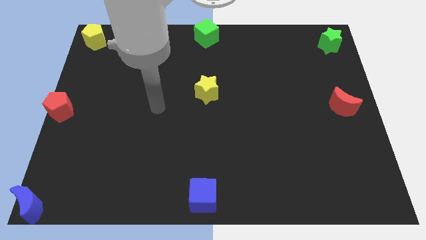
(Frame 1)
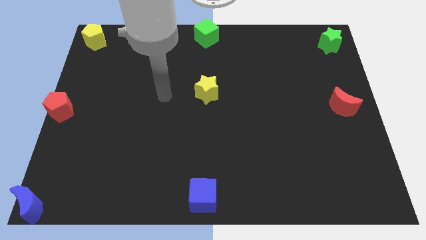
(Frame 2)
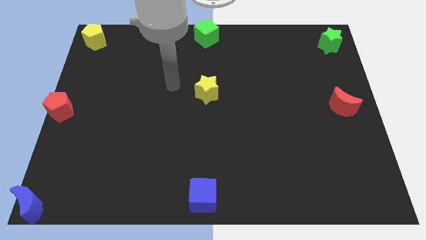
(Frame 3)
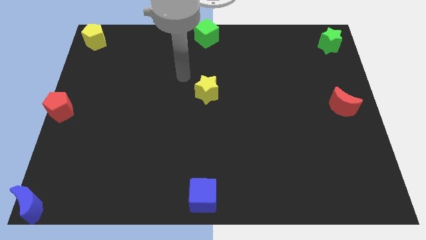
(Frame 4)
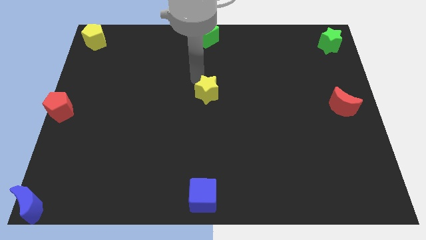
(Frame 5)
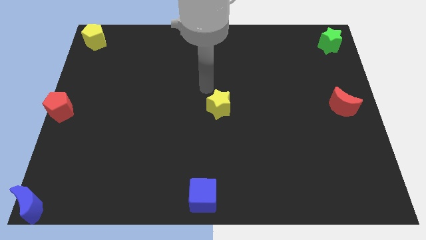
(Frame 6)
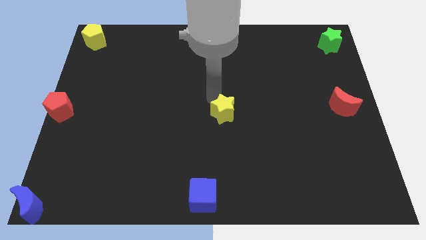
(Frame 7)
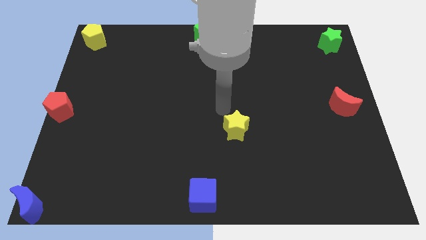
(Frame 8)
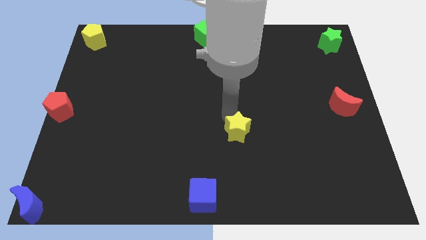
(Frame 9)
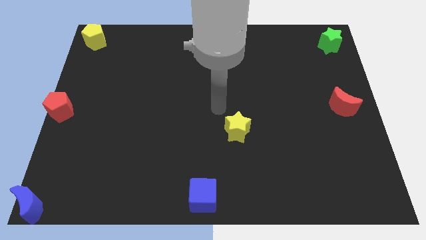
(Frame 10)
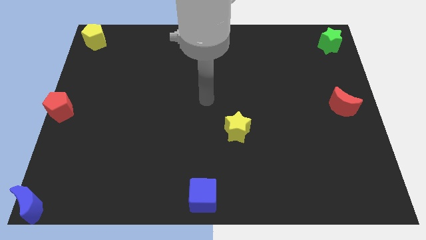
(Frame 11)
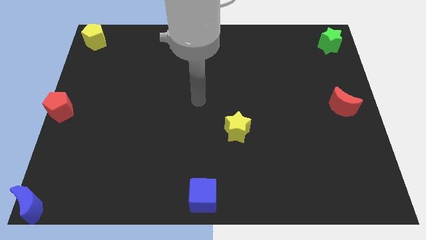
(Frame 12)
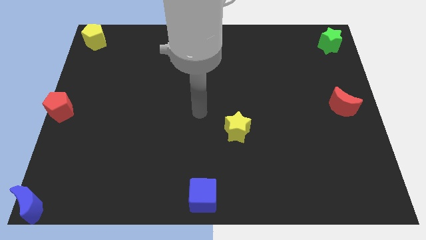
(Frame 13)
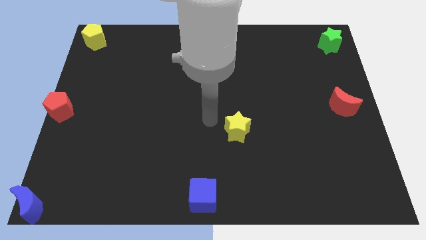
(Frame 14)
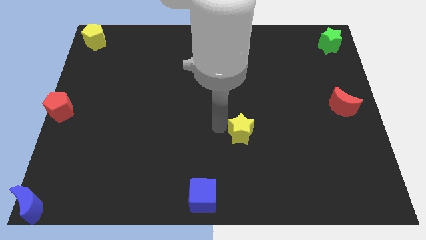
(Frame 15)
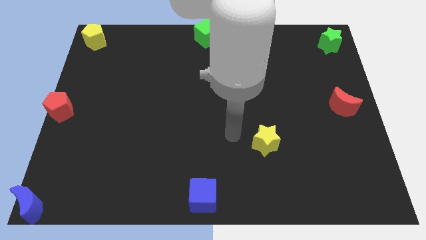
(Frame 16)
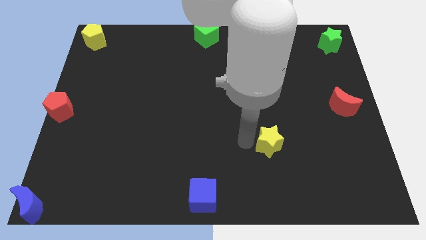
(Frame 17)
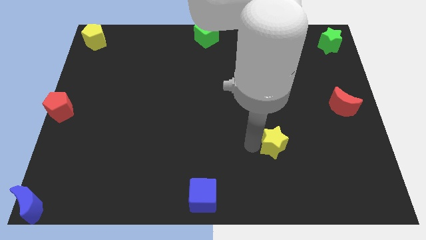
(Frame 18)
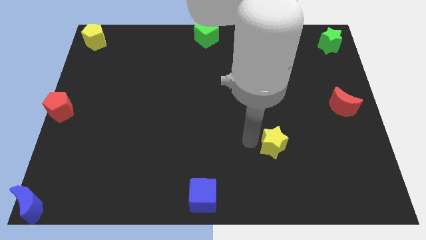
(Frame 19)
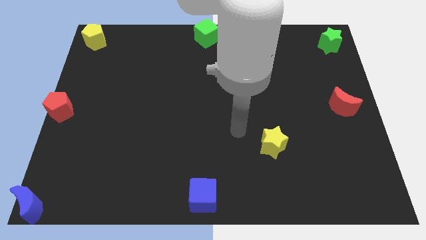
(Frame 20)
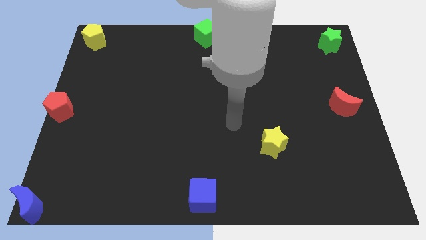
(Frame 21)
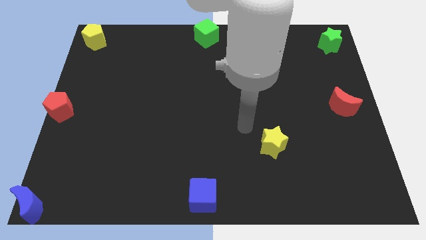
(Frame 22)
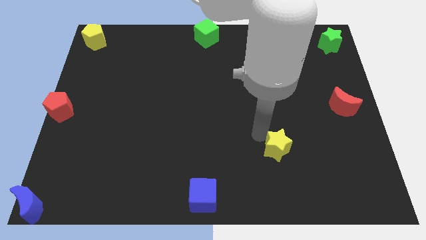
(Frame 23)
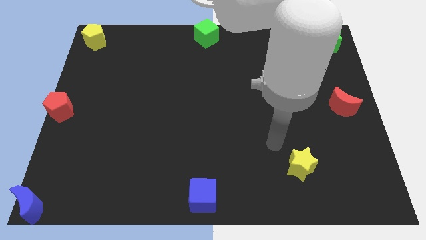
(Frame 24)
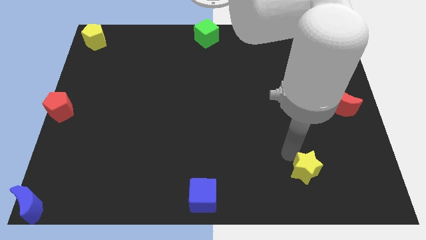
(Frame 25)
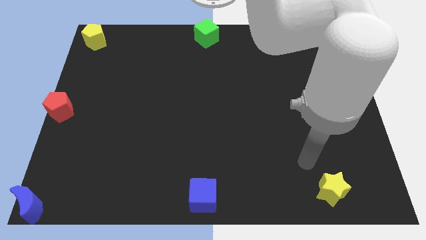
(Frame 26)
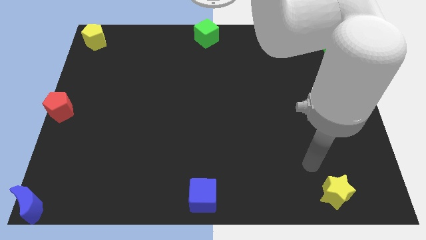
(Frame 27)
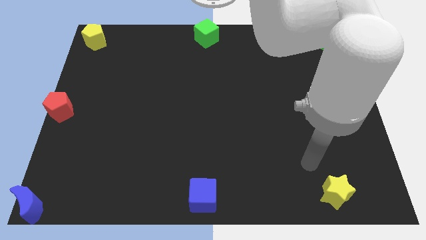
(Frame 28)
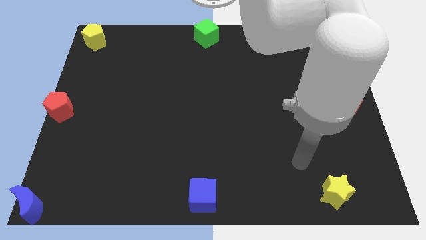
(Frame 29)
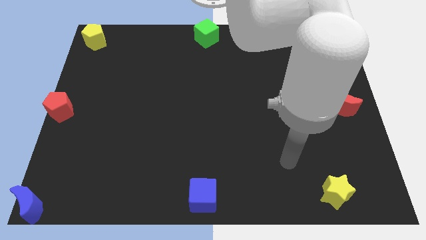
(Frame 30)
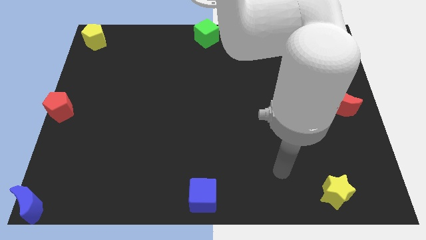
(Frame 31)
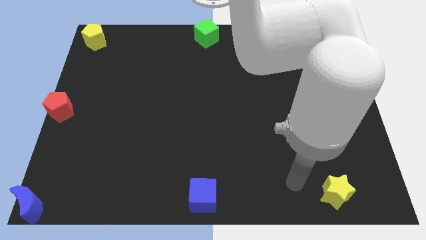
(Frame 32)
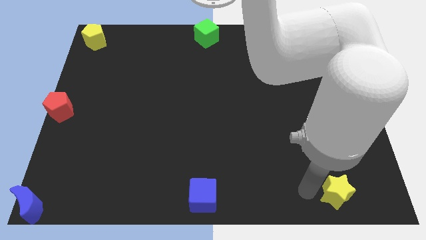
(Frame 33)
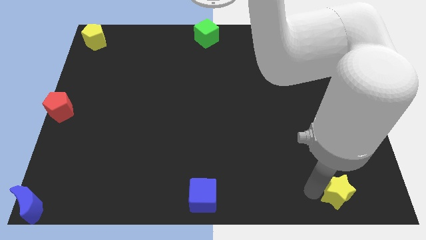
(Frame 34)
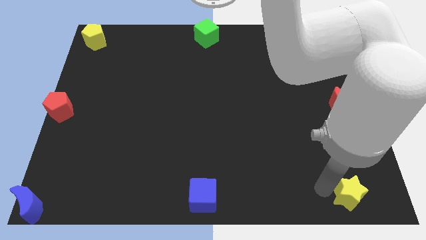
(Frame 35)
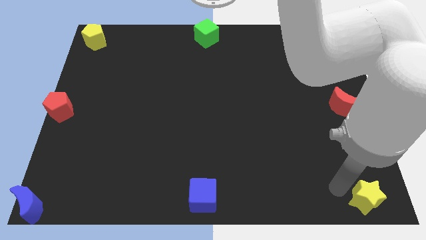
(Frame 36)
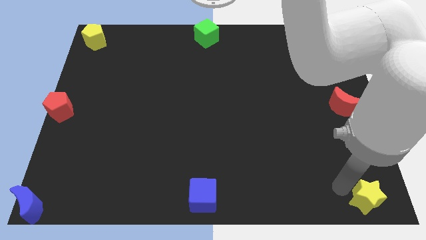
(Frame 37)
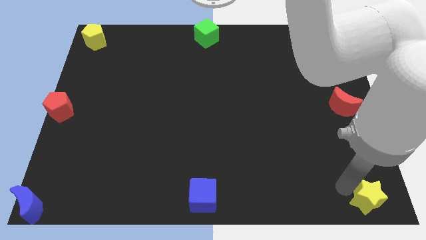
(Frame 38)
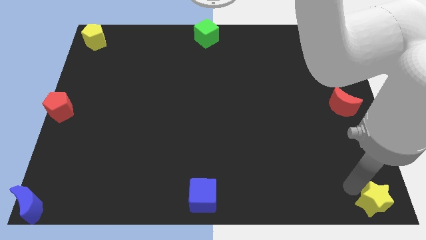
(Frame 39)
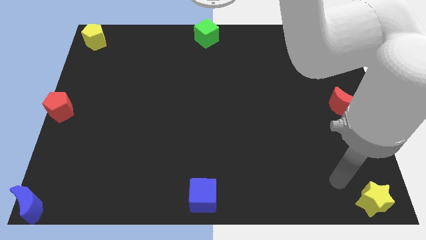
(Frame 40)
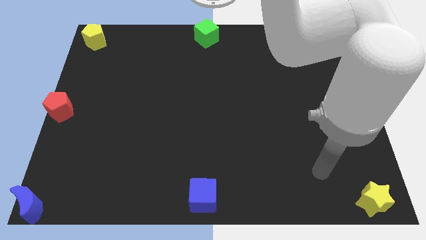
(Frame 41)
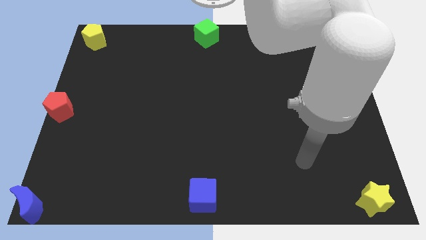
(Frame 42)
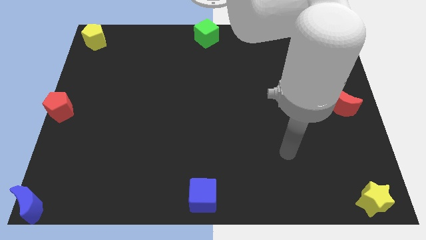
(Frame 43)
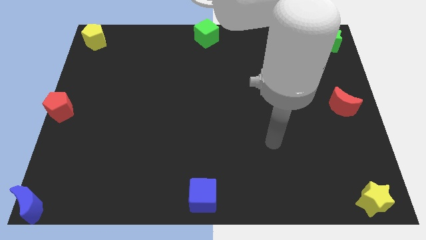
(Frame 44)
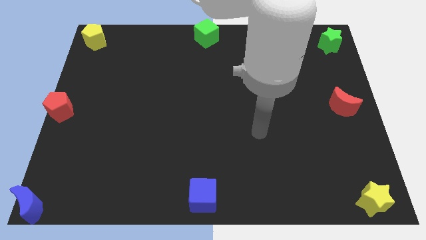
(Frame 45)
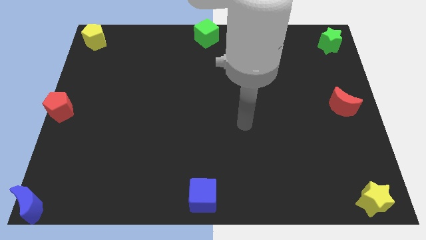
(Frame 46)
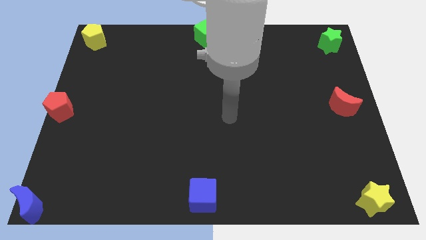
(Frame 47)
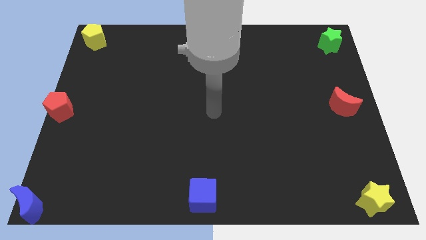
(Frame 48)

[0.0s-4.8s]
move the yellow star to the bottom right corner of the board

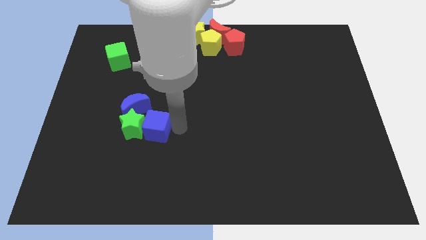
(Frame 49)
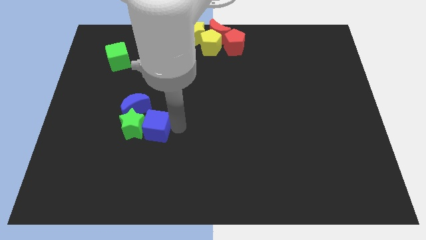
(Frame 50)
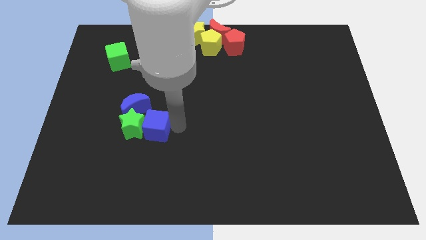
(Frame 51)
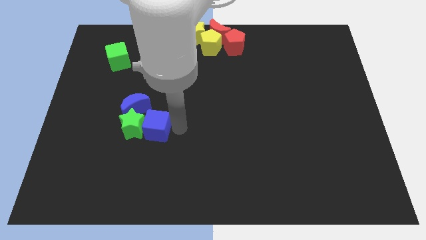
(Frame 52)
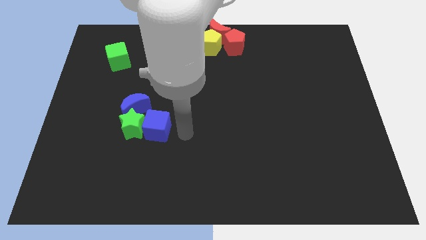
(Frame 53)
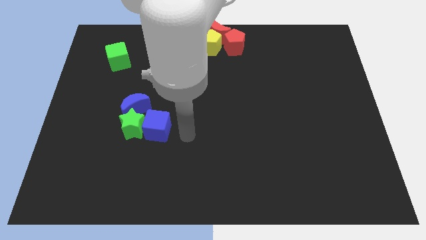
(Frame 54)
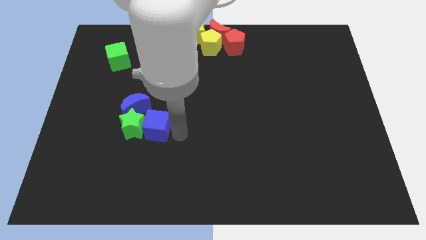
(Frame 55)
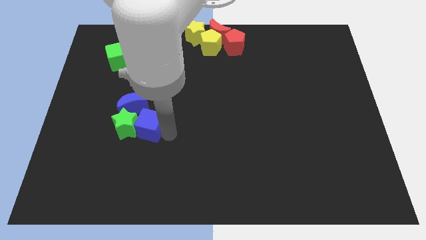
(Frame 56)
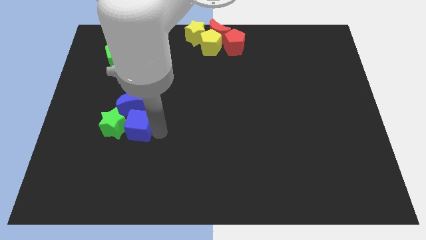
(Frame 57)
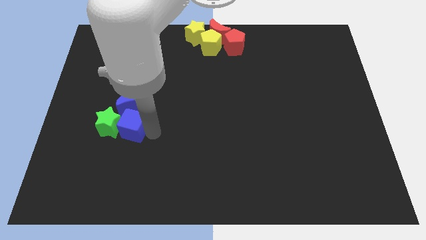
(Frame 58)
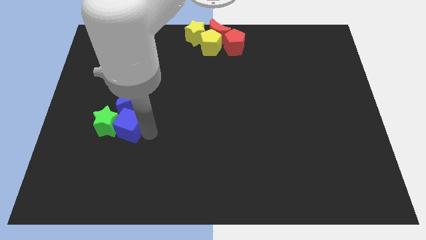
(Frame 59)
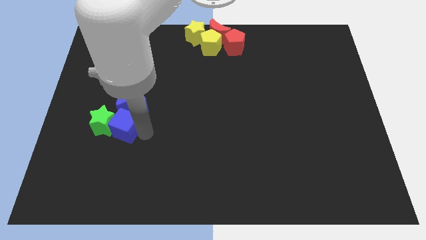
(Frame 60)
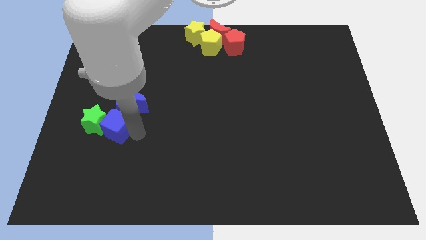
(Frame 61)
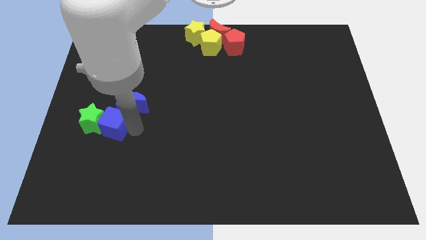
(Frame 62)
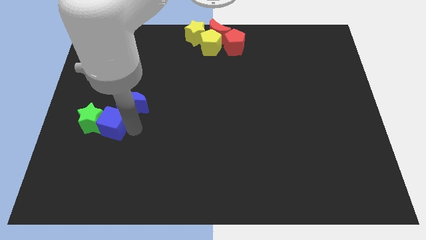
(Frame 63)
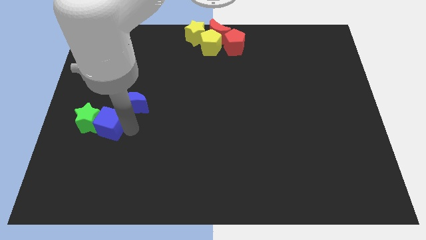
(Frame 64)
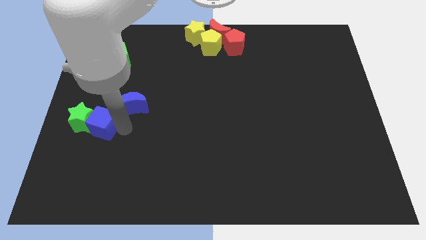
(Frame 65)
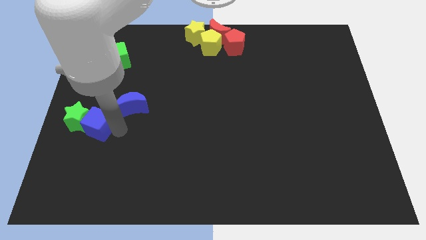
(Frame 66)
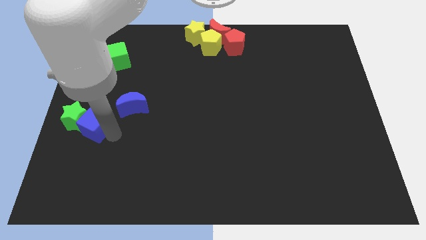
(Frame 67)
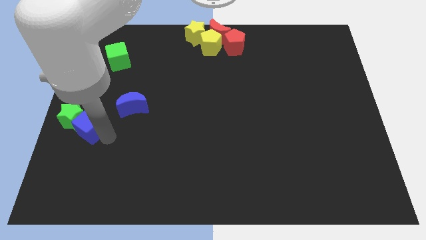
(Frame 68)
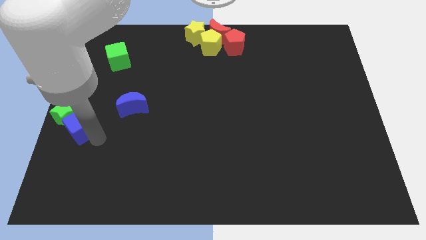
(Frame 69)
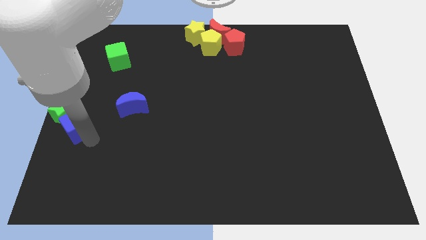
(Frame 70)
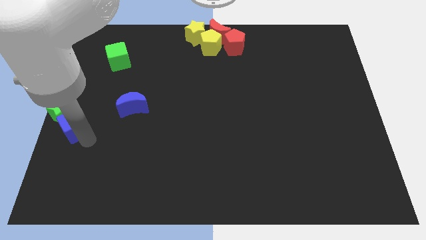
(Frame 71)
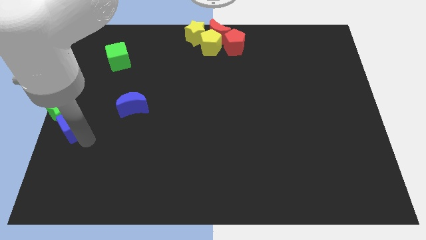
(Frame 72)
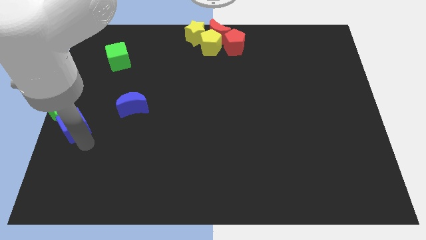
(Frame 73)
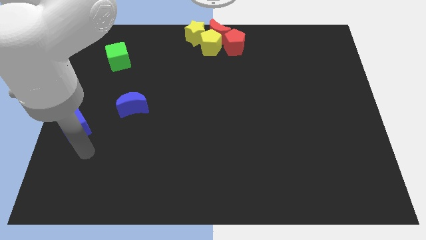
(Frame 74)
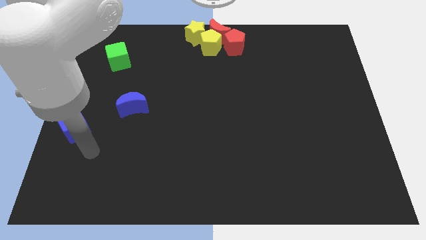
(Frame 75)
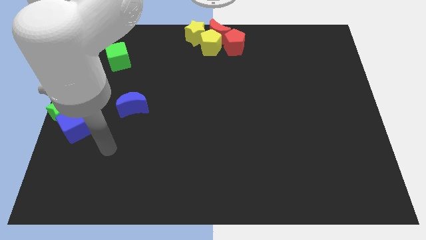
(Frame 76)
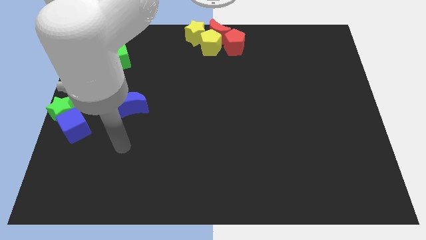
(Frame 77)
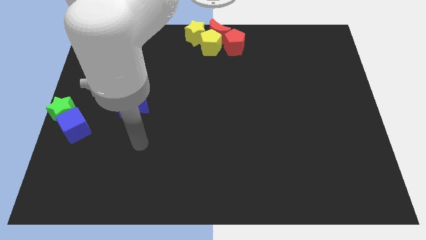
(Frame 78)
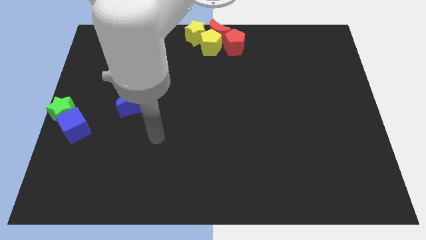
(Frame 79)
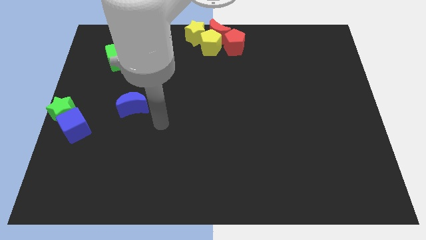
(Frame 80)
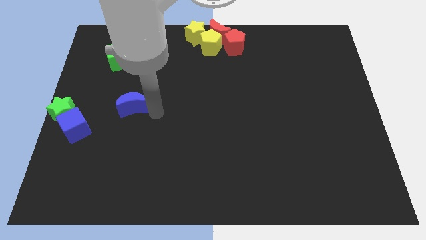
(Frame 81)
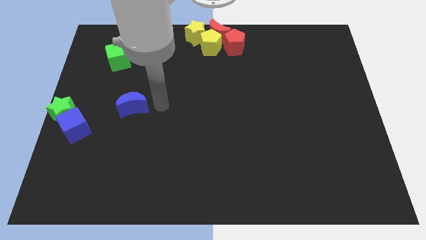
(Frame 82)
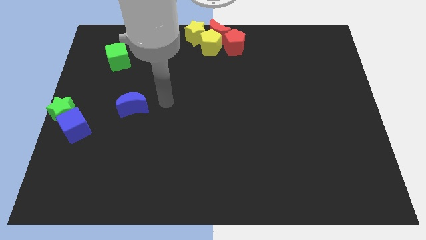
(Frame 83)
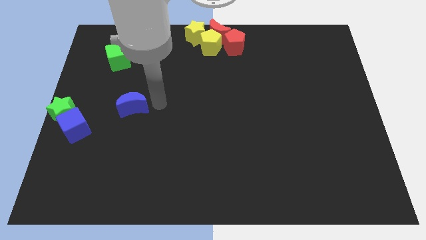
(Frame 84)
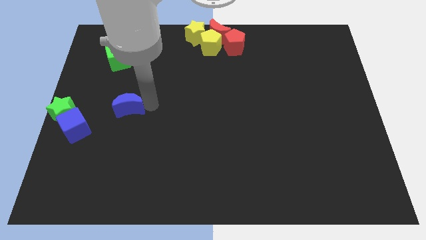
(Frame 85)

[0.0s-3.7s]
separate blue cube and the green star from the blue moon

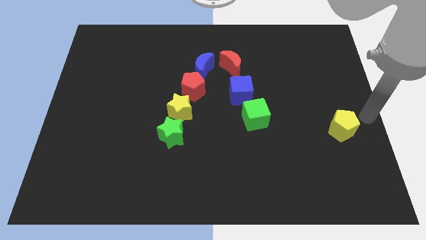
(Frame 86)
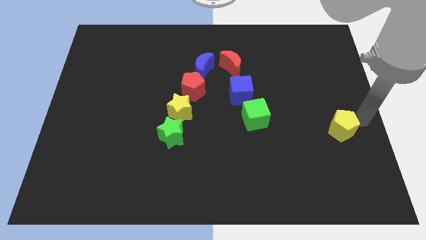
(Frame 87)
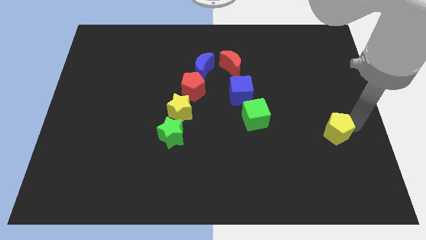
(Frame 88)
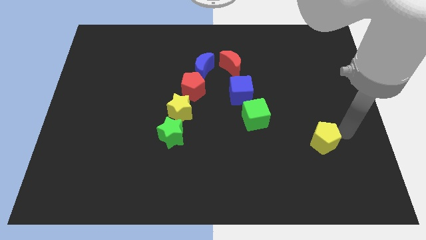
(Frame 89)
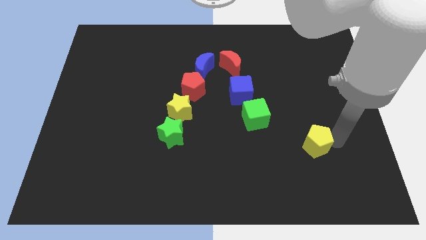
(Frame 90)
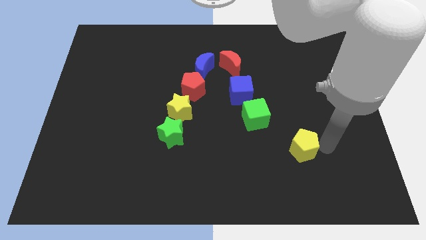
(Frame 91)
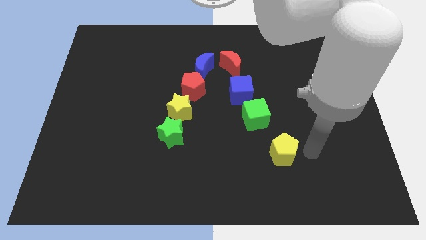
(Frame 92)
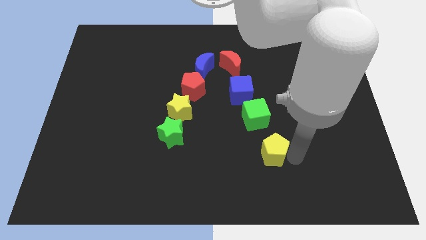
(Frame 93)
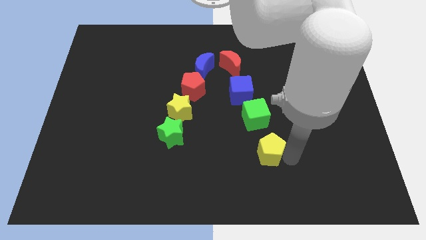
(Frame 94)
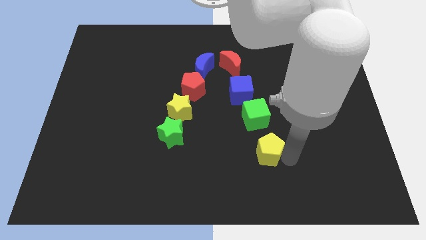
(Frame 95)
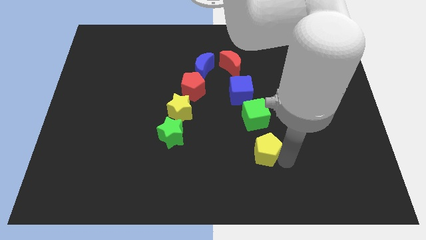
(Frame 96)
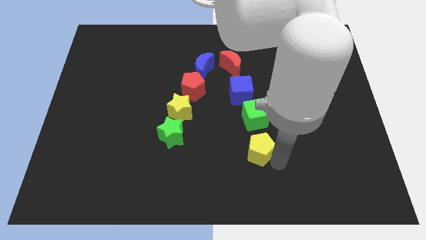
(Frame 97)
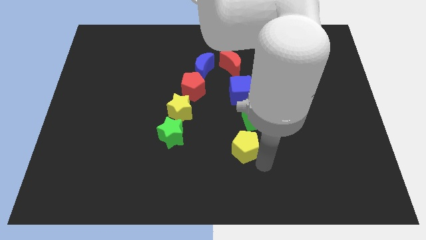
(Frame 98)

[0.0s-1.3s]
slide the yellow pentagon below the green cube
